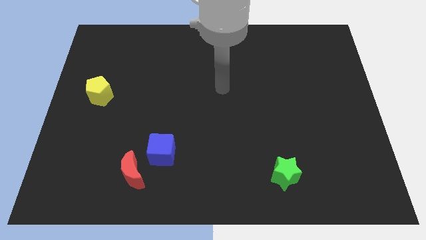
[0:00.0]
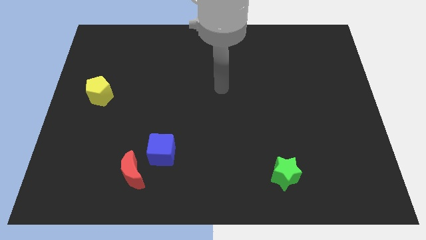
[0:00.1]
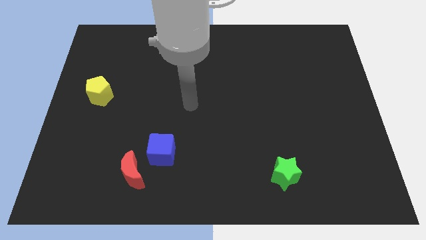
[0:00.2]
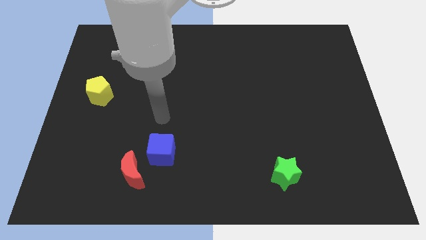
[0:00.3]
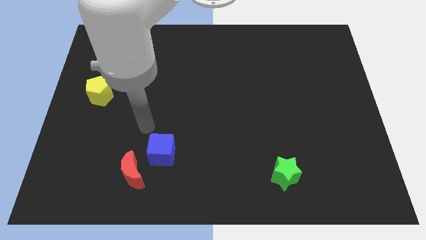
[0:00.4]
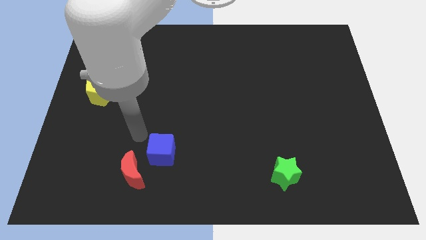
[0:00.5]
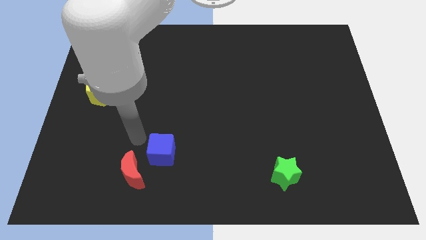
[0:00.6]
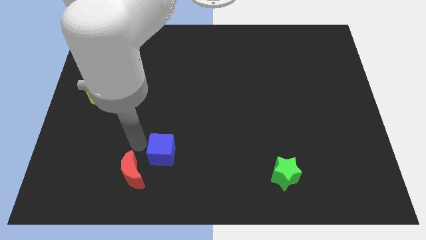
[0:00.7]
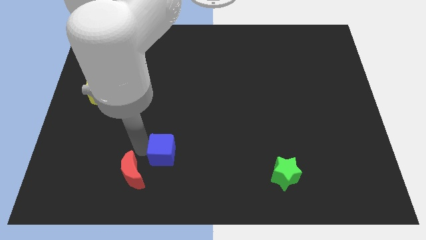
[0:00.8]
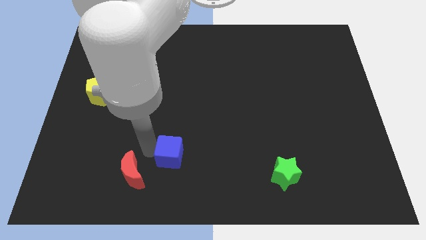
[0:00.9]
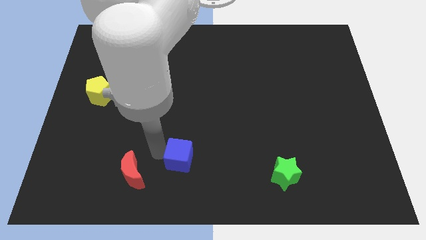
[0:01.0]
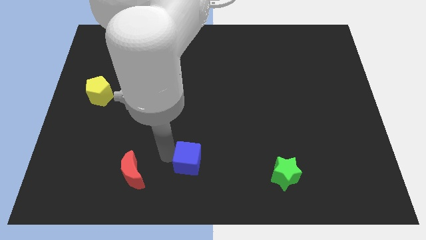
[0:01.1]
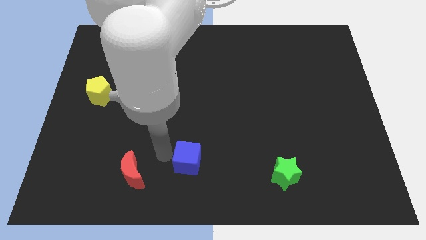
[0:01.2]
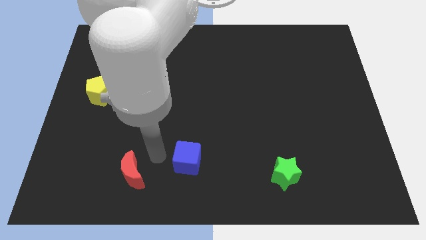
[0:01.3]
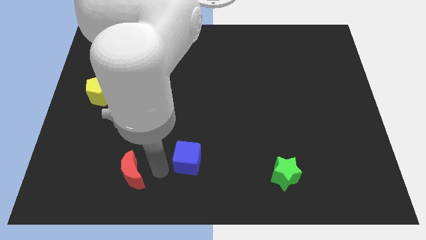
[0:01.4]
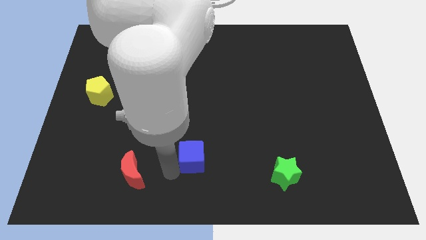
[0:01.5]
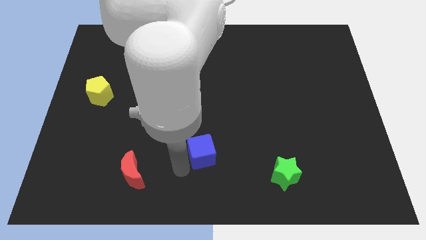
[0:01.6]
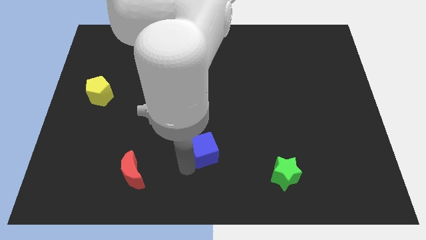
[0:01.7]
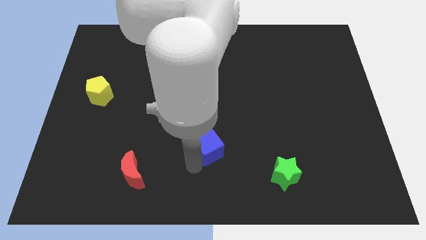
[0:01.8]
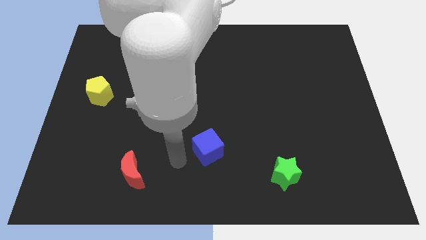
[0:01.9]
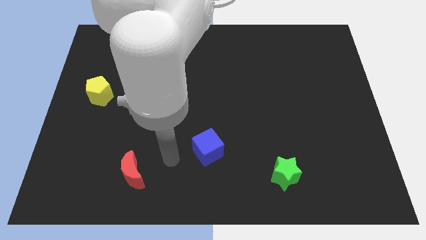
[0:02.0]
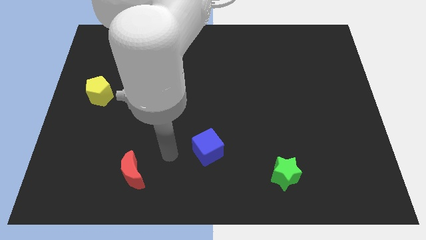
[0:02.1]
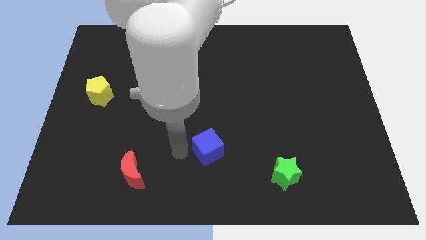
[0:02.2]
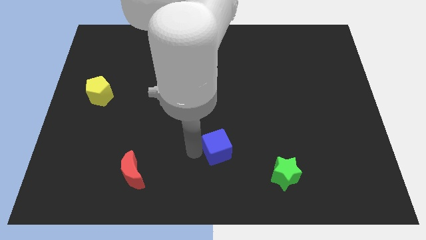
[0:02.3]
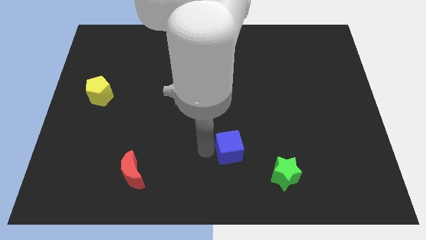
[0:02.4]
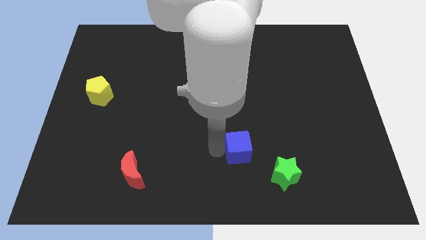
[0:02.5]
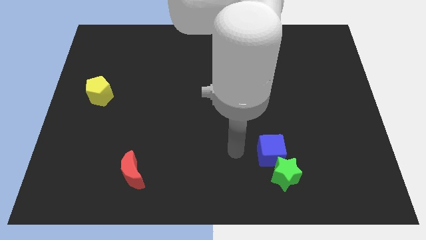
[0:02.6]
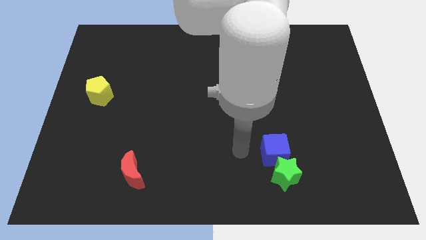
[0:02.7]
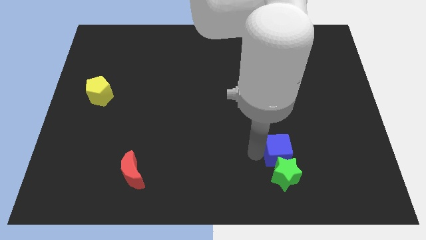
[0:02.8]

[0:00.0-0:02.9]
put the blue block next to the star

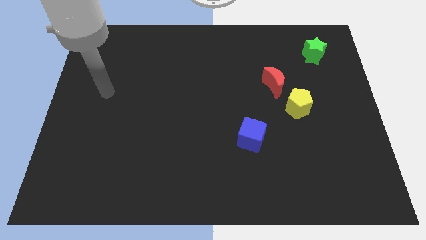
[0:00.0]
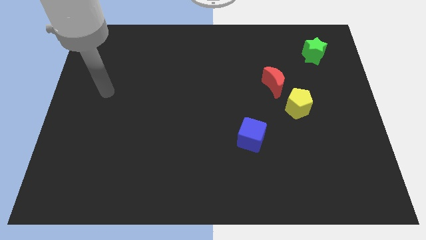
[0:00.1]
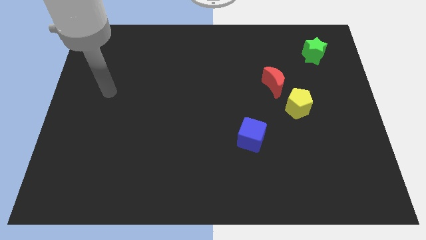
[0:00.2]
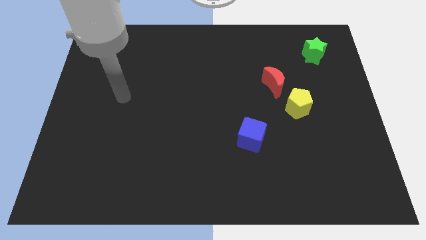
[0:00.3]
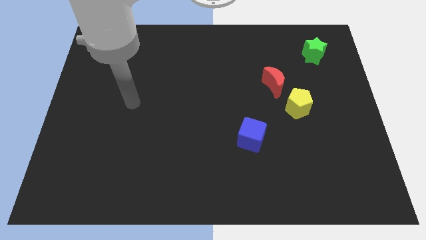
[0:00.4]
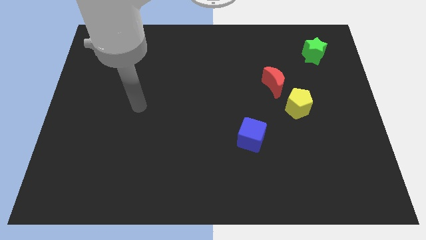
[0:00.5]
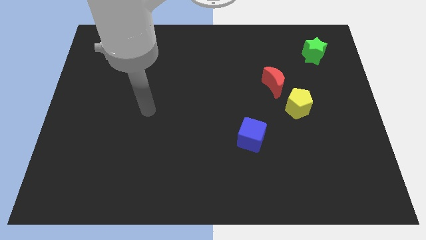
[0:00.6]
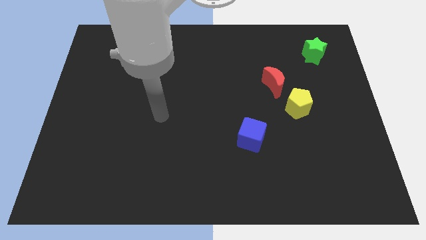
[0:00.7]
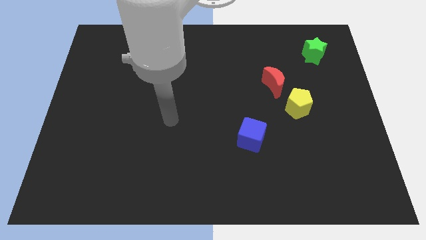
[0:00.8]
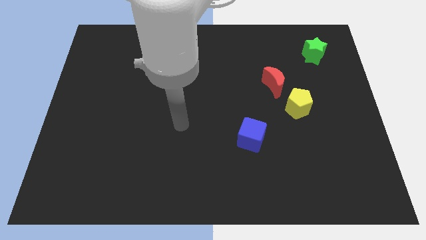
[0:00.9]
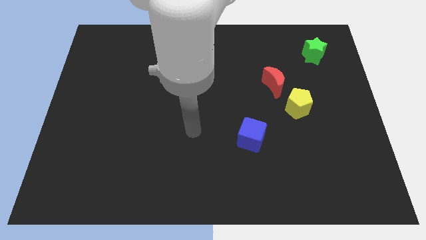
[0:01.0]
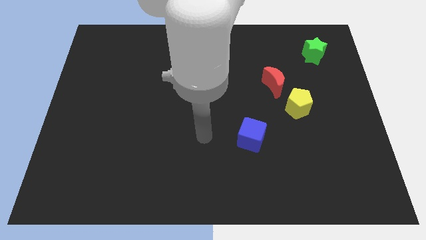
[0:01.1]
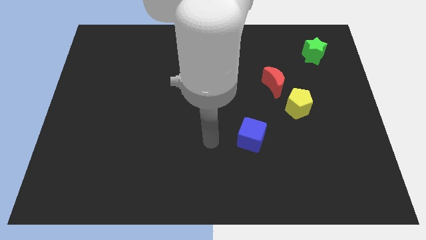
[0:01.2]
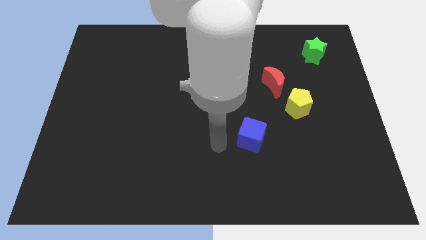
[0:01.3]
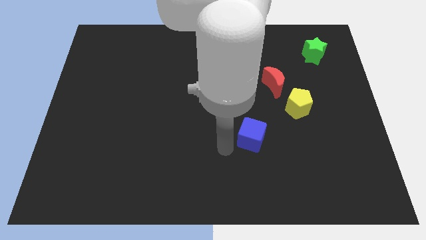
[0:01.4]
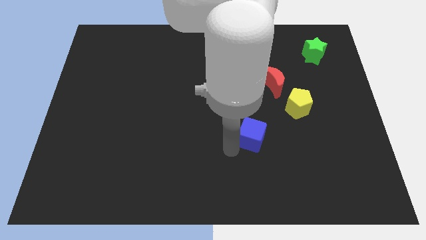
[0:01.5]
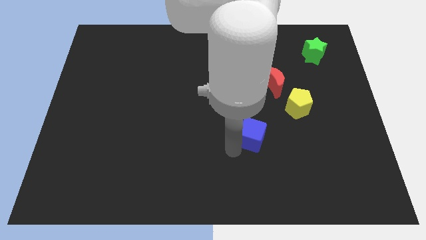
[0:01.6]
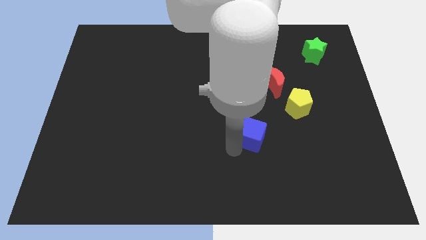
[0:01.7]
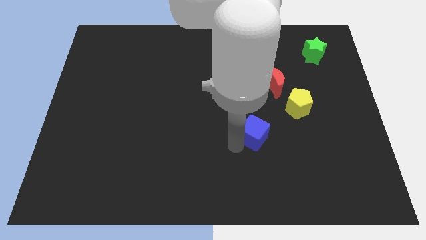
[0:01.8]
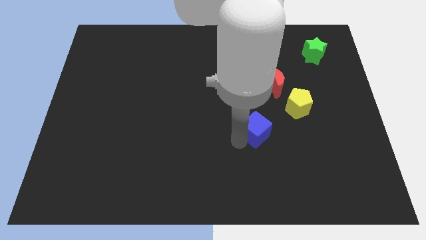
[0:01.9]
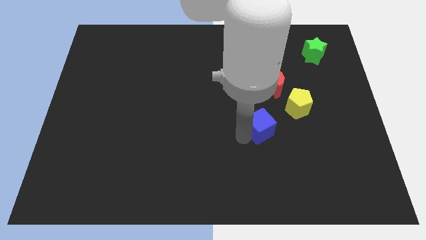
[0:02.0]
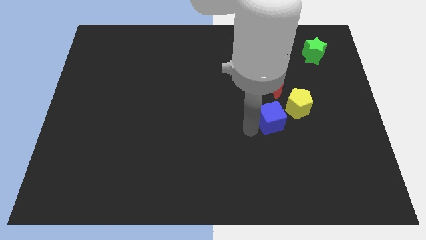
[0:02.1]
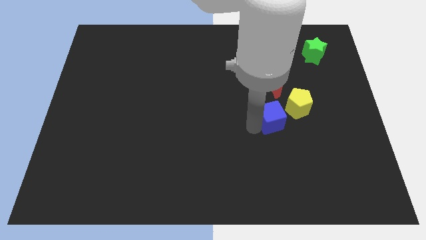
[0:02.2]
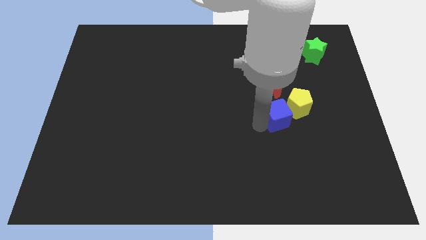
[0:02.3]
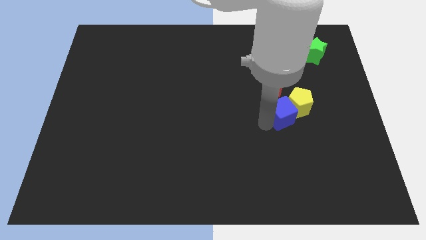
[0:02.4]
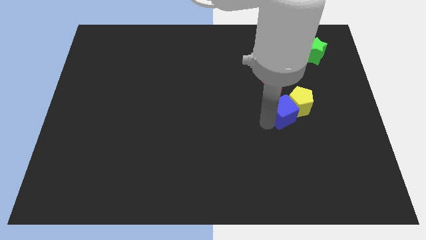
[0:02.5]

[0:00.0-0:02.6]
put the cube to the pentagon

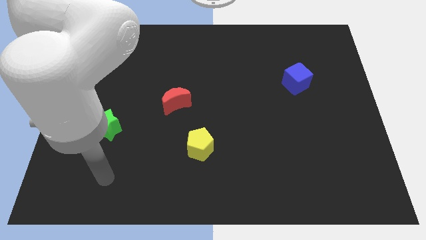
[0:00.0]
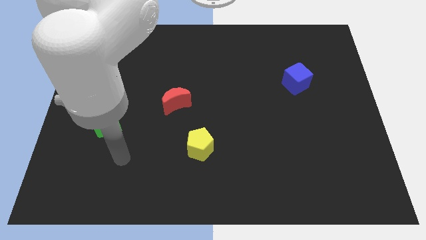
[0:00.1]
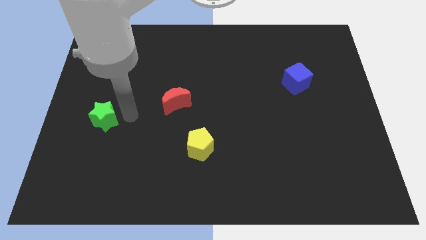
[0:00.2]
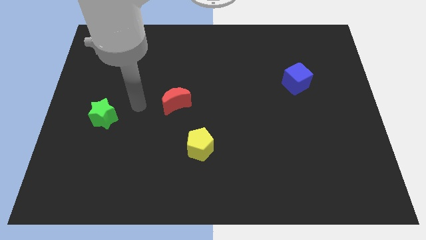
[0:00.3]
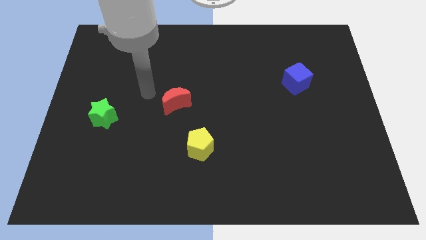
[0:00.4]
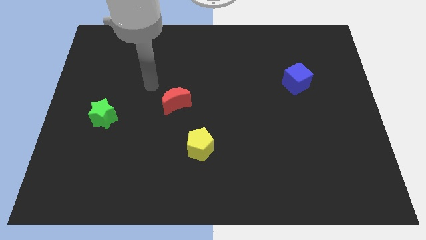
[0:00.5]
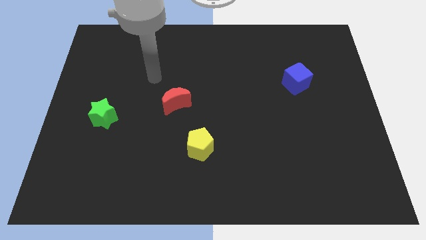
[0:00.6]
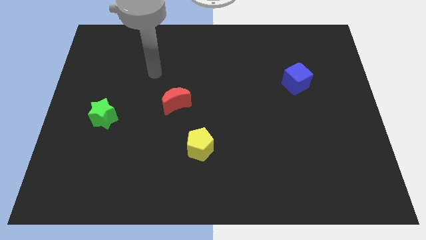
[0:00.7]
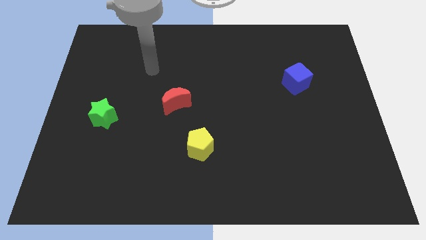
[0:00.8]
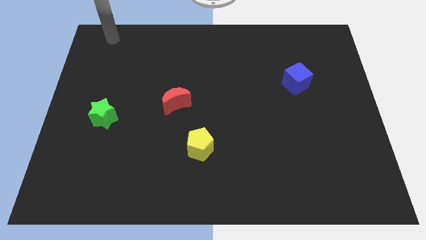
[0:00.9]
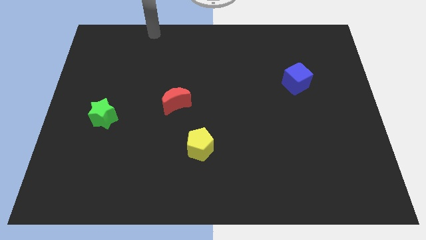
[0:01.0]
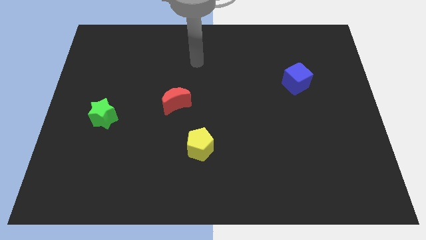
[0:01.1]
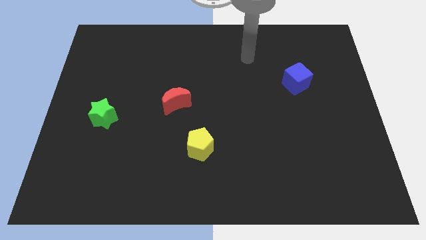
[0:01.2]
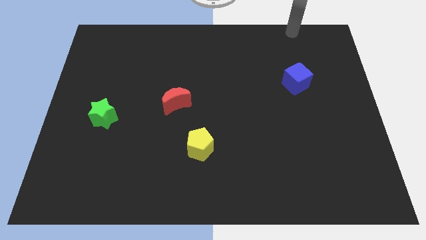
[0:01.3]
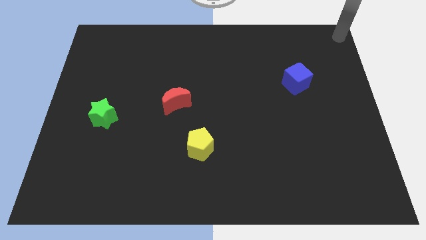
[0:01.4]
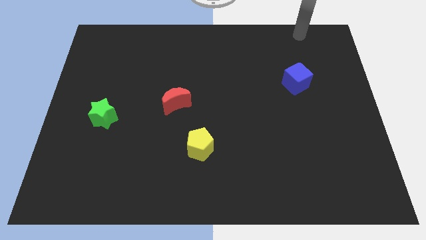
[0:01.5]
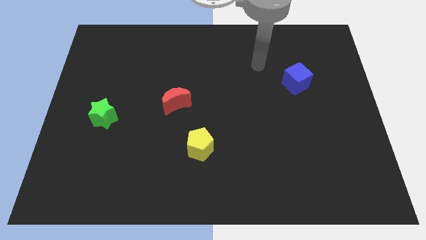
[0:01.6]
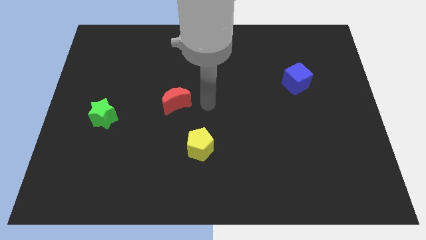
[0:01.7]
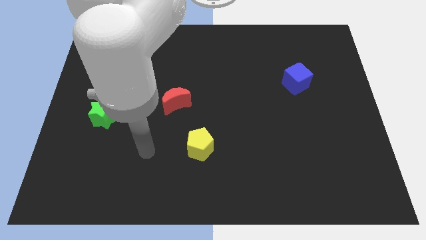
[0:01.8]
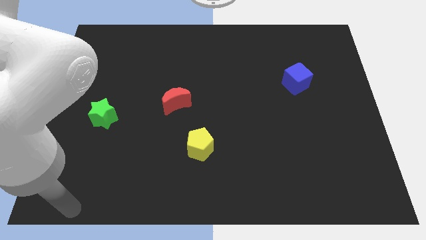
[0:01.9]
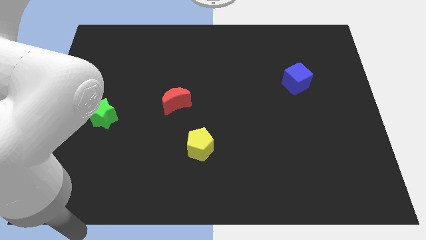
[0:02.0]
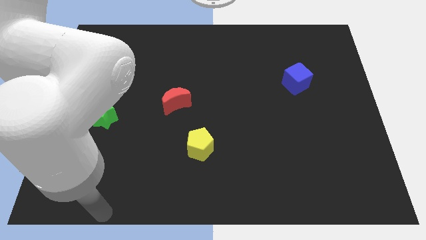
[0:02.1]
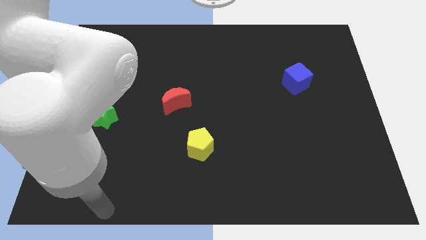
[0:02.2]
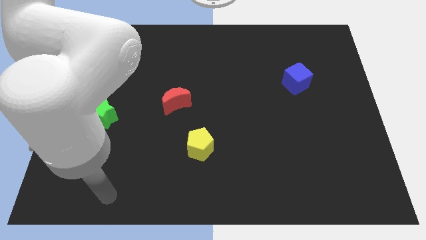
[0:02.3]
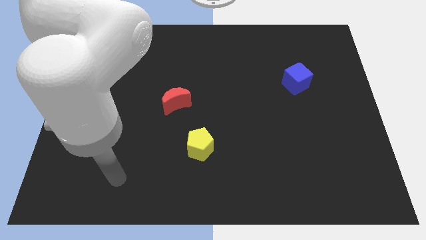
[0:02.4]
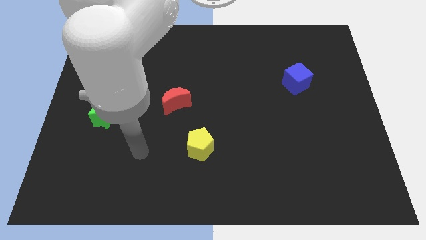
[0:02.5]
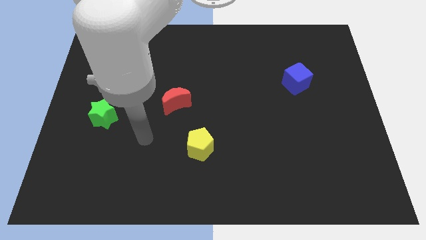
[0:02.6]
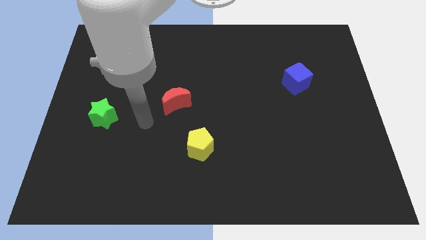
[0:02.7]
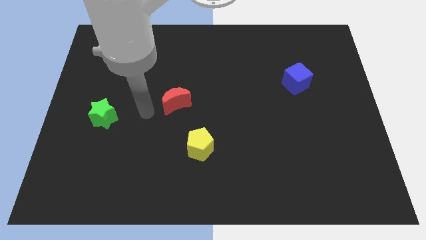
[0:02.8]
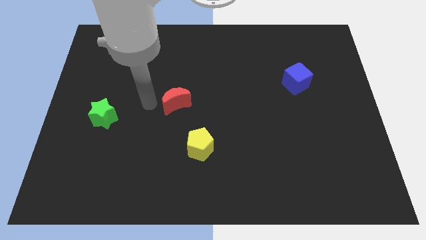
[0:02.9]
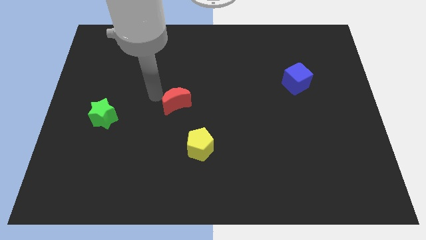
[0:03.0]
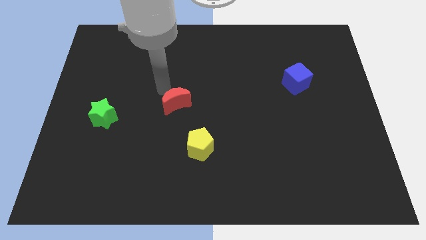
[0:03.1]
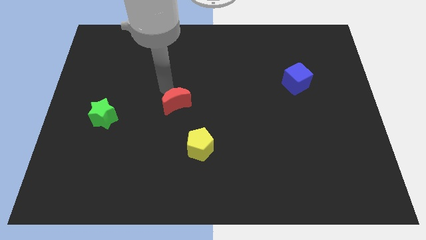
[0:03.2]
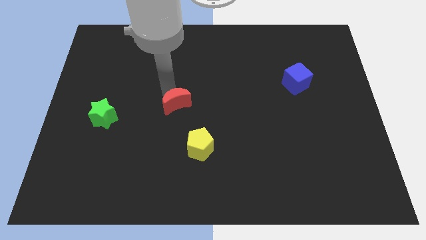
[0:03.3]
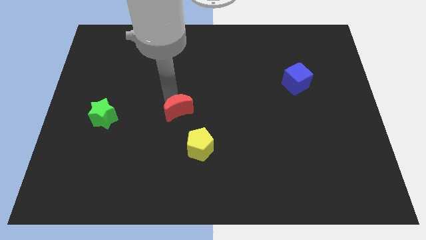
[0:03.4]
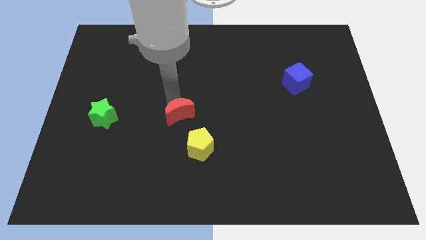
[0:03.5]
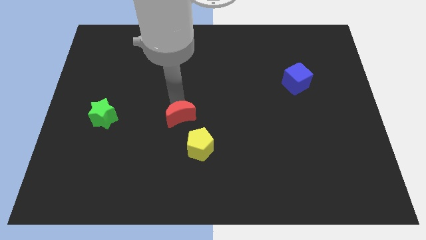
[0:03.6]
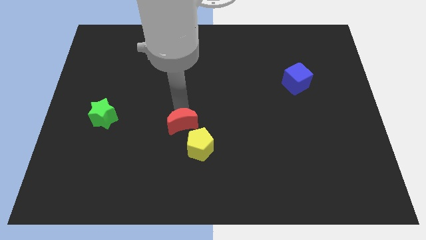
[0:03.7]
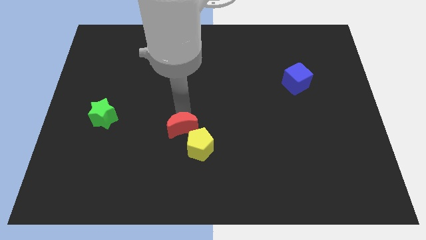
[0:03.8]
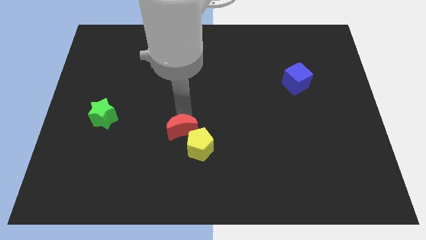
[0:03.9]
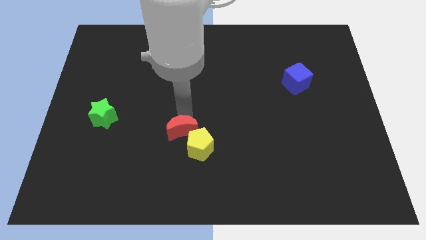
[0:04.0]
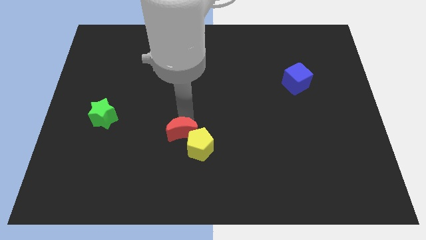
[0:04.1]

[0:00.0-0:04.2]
move the red moon to the yellow block
